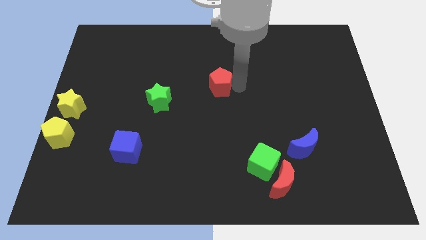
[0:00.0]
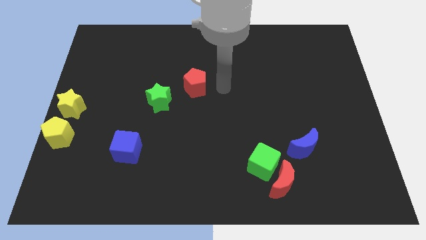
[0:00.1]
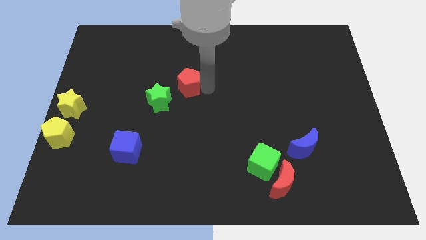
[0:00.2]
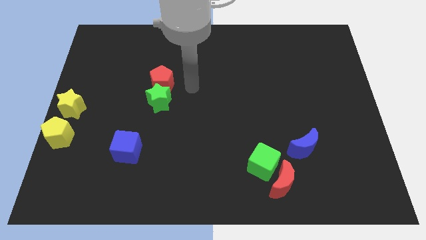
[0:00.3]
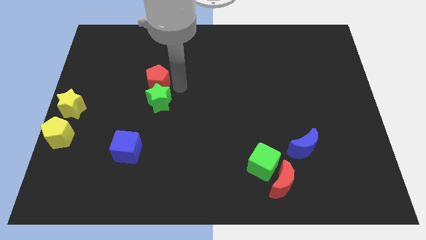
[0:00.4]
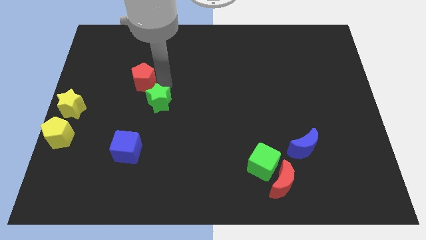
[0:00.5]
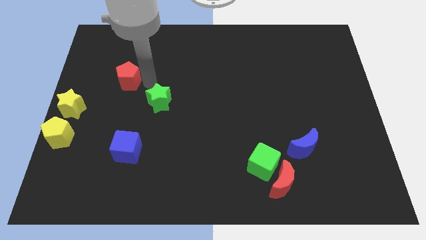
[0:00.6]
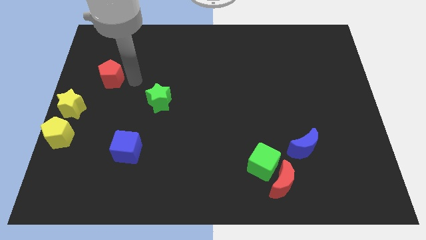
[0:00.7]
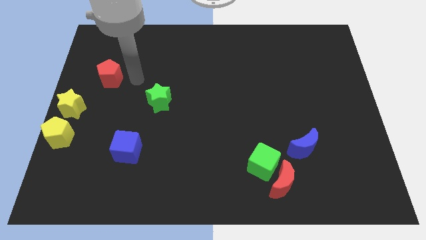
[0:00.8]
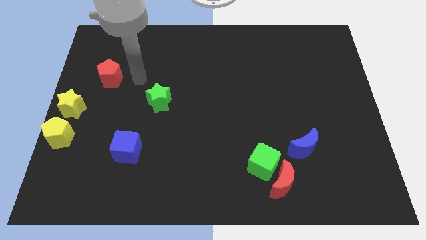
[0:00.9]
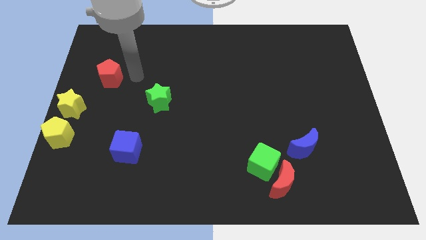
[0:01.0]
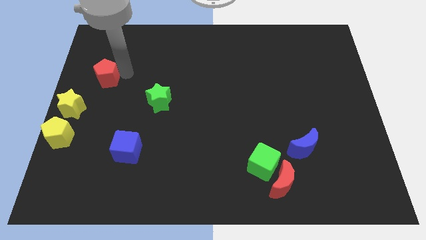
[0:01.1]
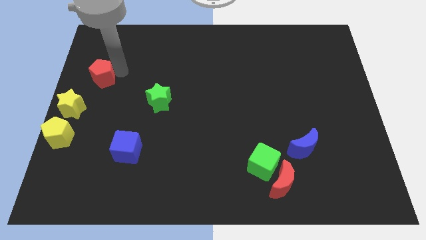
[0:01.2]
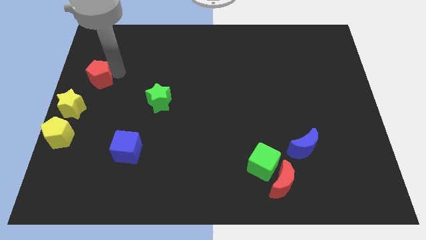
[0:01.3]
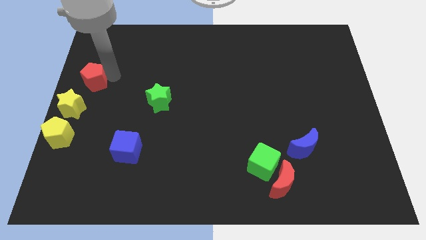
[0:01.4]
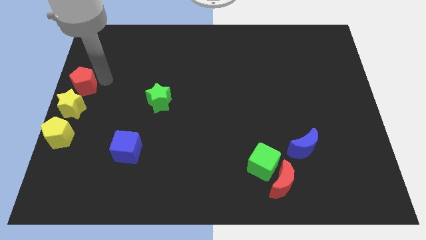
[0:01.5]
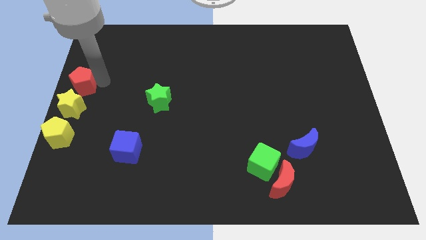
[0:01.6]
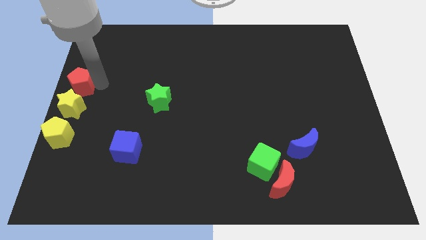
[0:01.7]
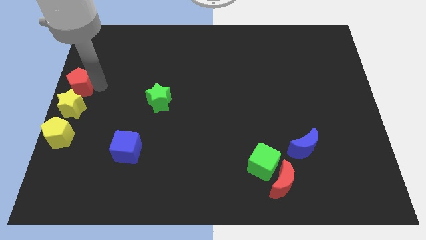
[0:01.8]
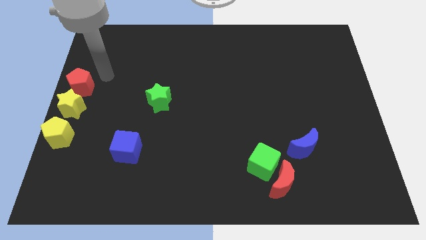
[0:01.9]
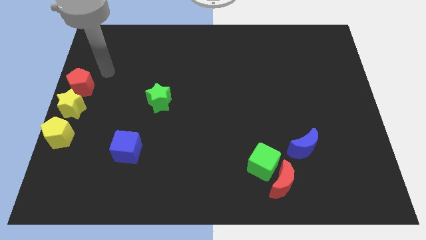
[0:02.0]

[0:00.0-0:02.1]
place red pentagon on top of yellow star

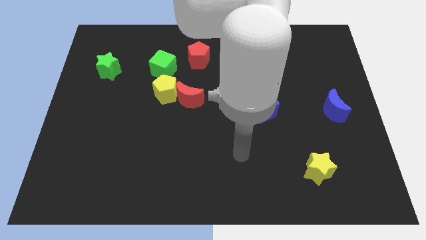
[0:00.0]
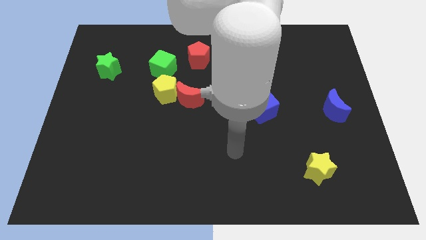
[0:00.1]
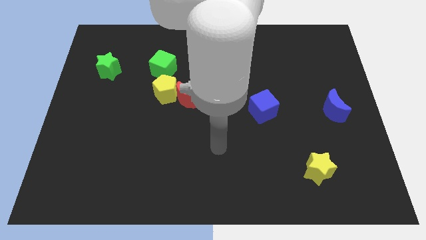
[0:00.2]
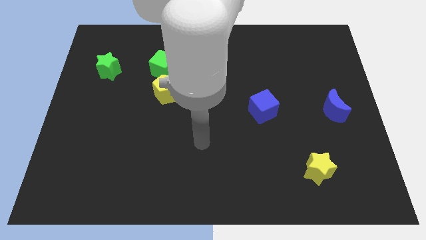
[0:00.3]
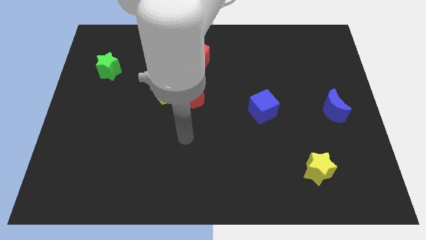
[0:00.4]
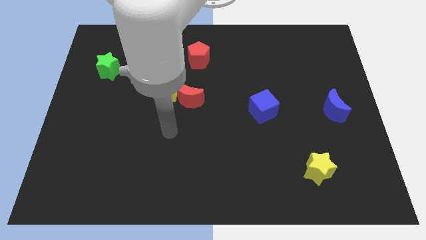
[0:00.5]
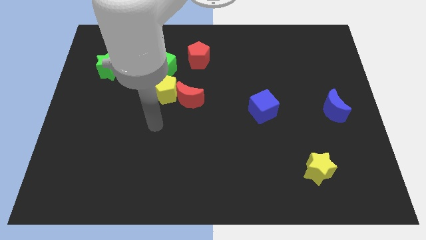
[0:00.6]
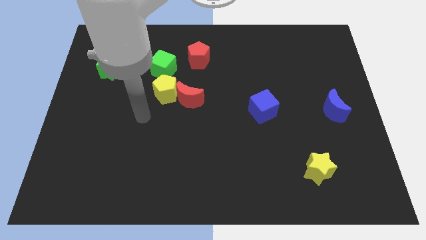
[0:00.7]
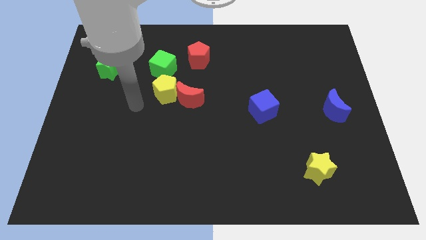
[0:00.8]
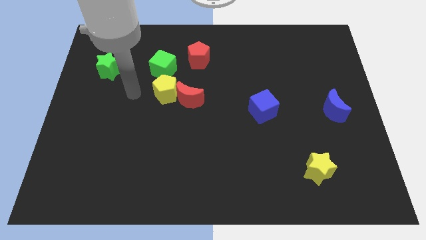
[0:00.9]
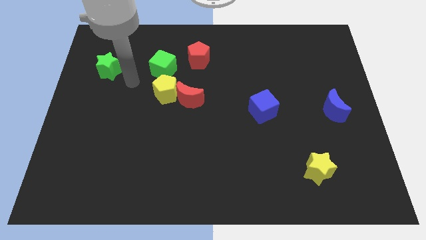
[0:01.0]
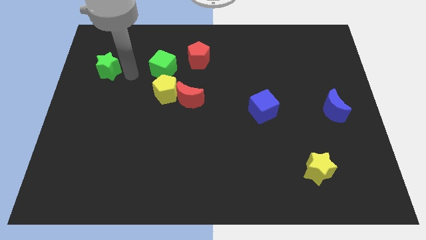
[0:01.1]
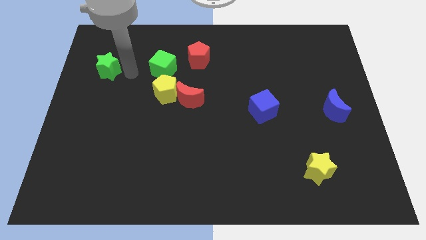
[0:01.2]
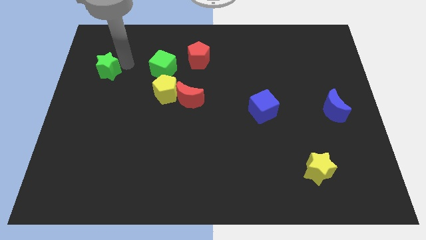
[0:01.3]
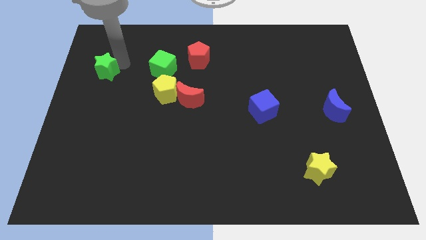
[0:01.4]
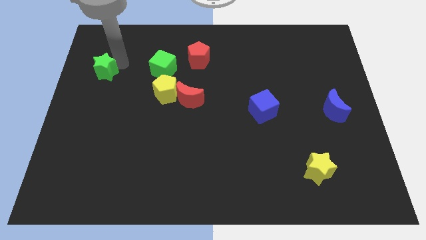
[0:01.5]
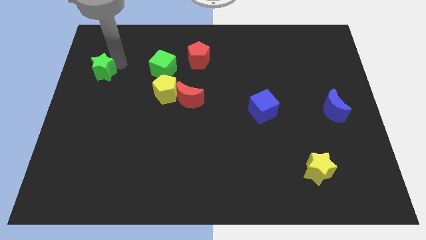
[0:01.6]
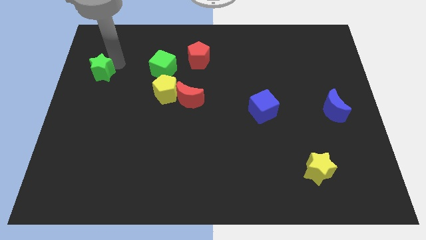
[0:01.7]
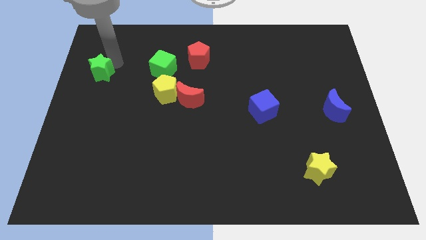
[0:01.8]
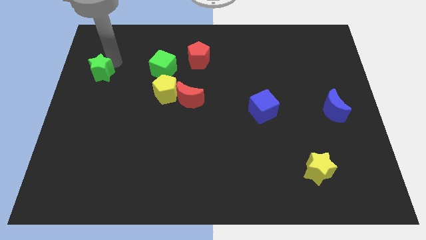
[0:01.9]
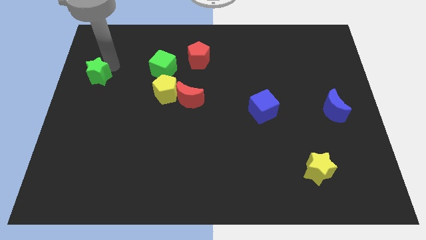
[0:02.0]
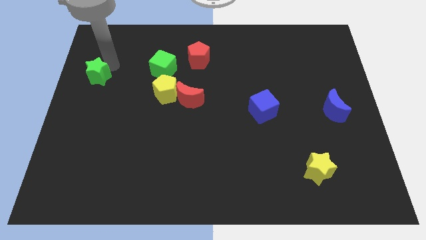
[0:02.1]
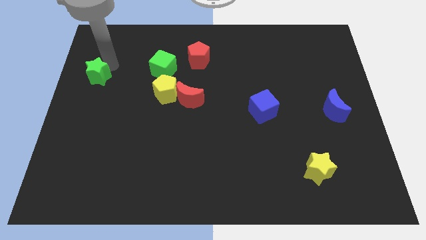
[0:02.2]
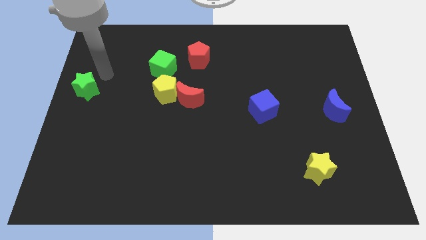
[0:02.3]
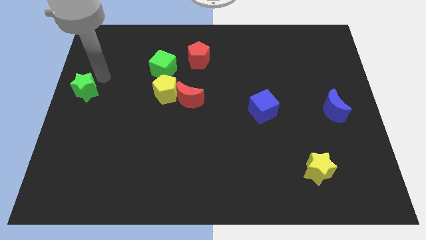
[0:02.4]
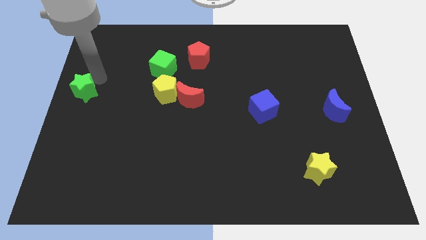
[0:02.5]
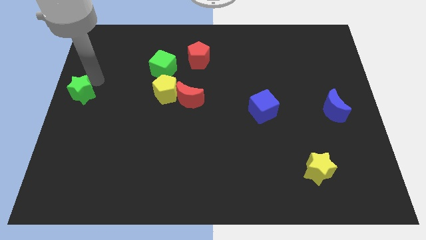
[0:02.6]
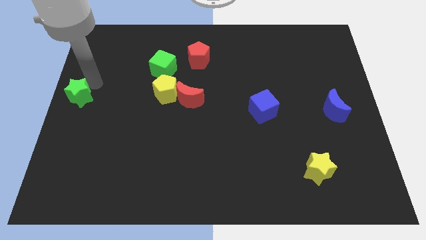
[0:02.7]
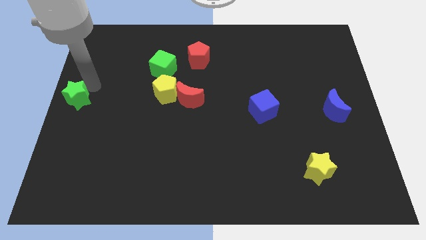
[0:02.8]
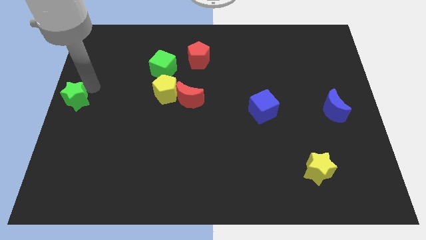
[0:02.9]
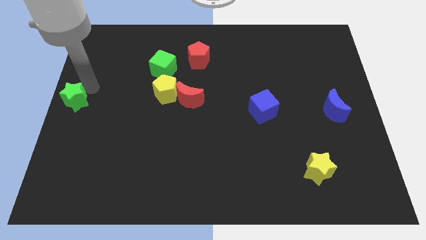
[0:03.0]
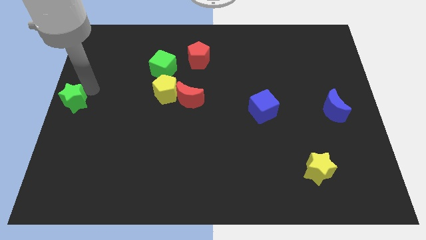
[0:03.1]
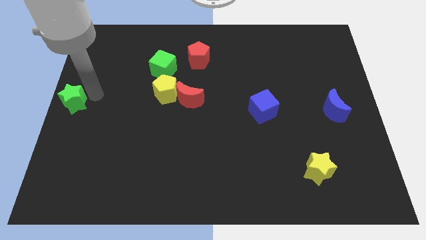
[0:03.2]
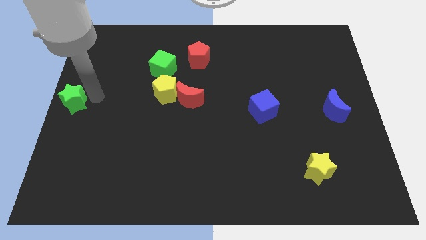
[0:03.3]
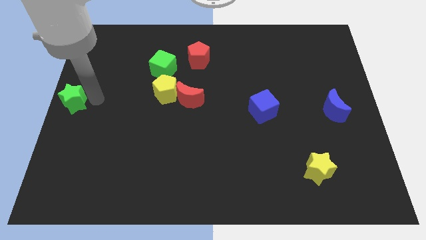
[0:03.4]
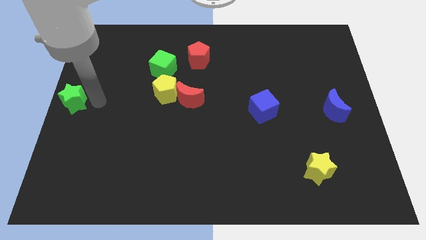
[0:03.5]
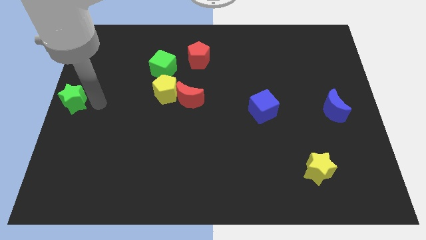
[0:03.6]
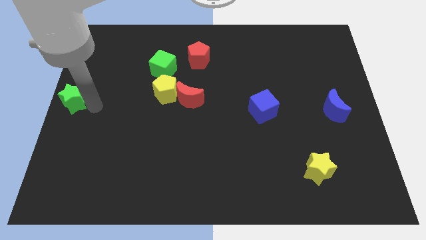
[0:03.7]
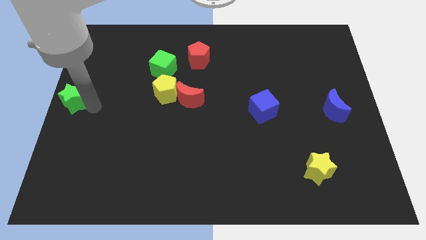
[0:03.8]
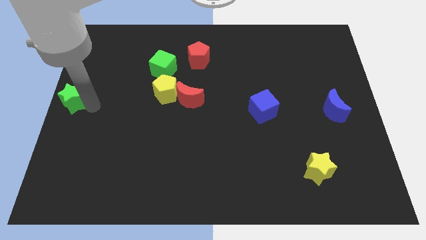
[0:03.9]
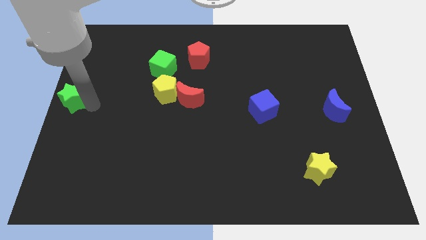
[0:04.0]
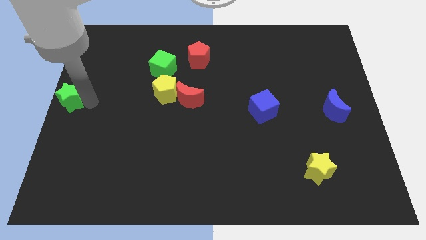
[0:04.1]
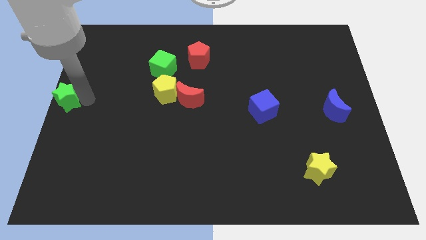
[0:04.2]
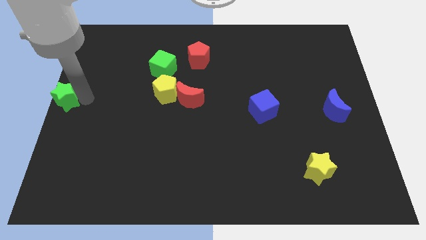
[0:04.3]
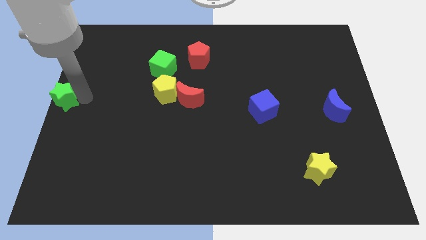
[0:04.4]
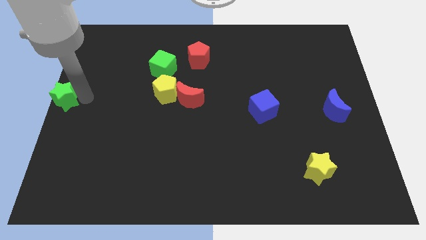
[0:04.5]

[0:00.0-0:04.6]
push the green star to the cneter left of the board

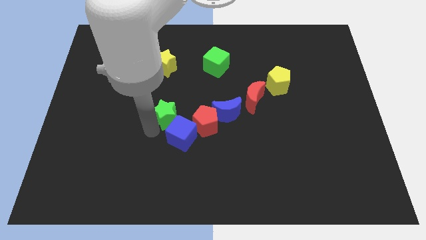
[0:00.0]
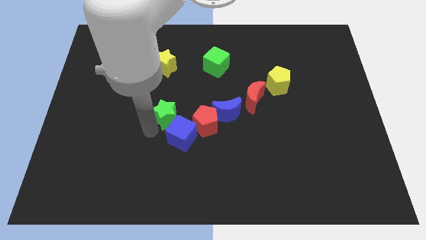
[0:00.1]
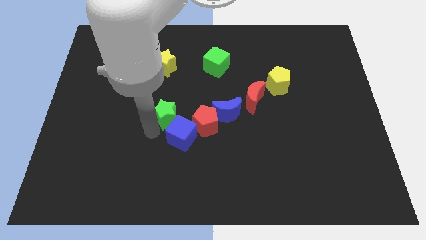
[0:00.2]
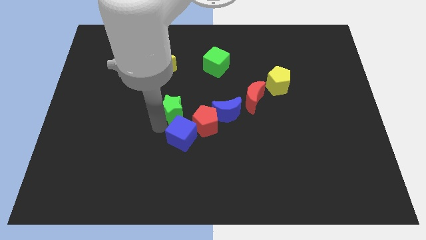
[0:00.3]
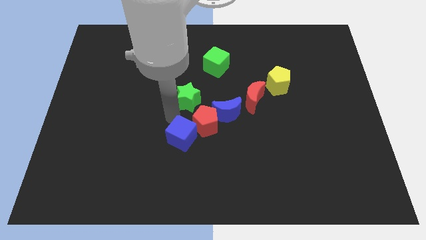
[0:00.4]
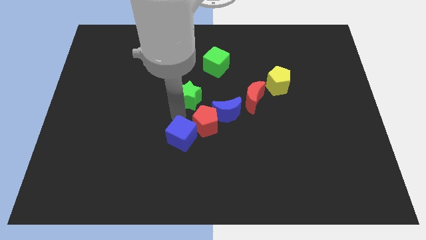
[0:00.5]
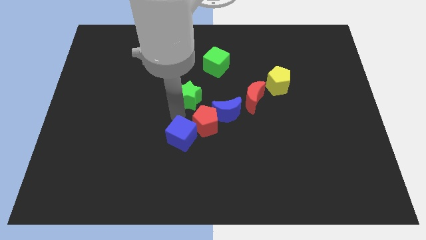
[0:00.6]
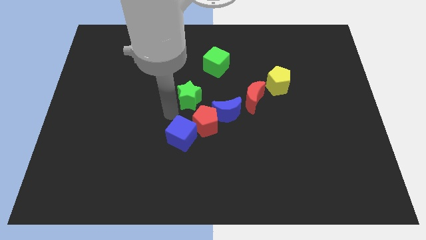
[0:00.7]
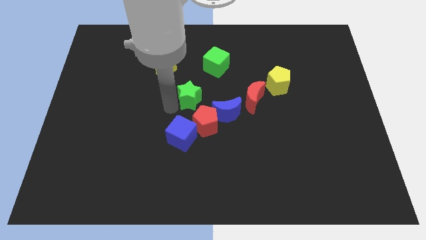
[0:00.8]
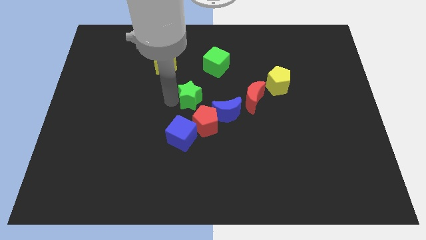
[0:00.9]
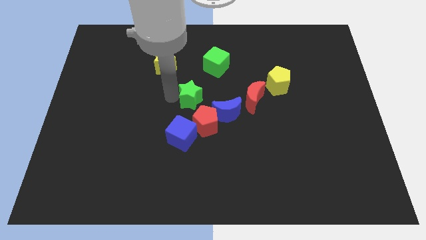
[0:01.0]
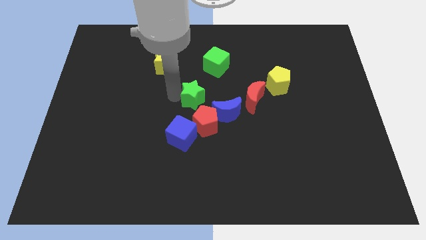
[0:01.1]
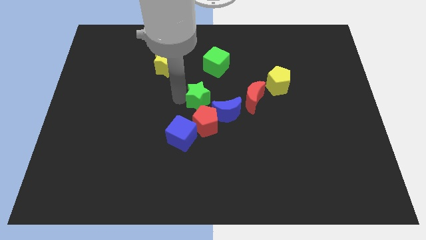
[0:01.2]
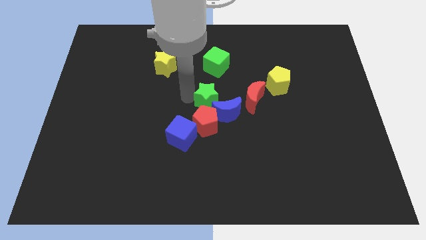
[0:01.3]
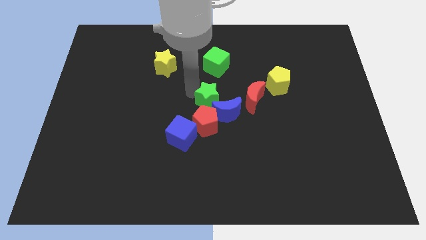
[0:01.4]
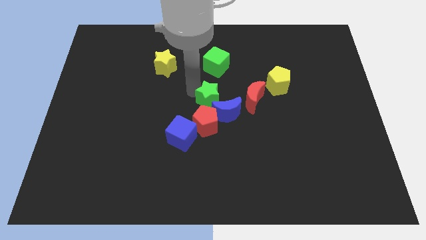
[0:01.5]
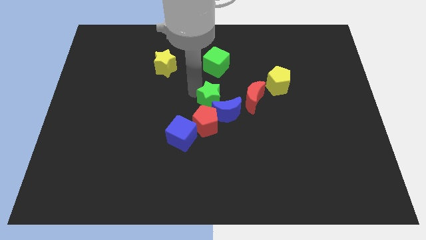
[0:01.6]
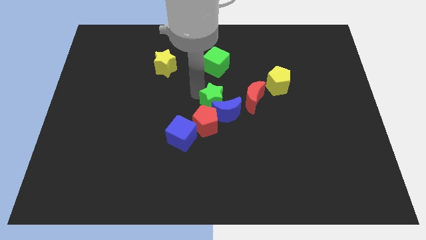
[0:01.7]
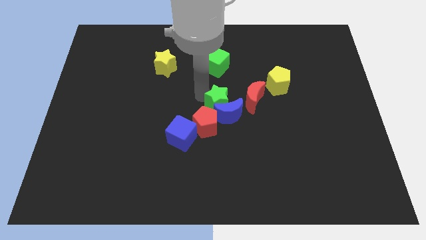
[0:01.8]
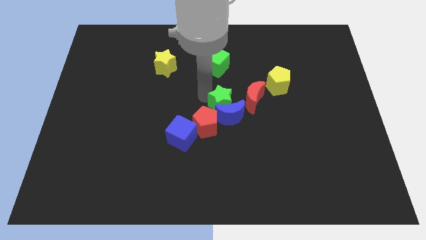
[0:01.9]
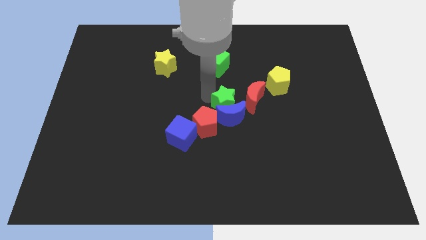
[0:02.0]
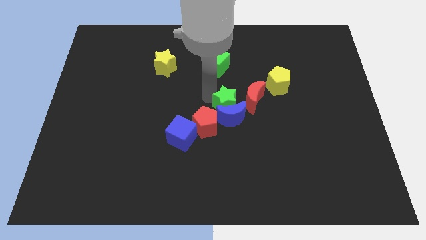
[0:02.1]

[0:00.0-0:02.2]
put the green star above the blue moon

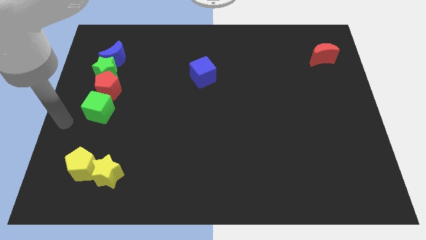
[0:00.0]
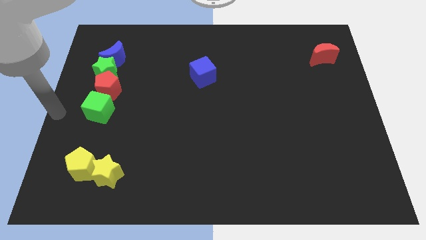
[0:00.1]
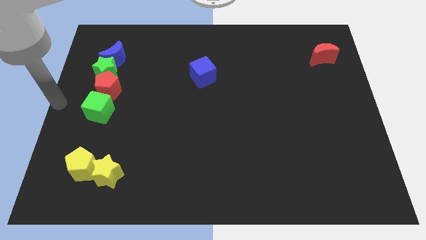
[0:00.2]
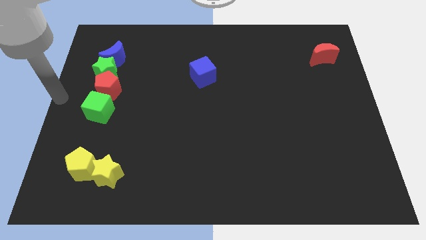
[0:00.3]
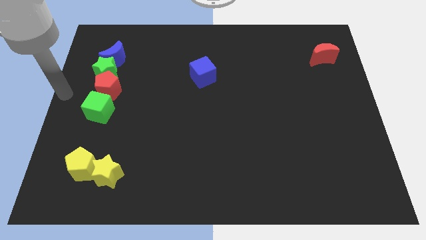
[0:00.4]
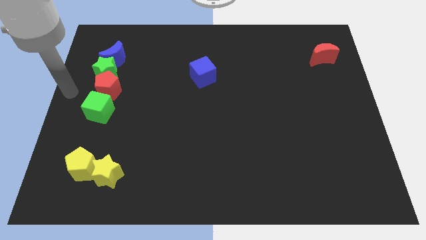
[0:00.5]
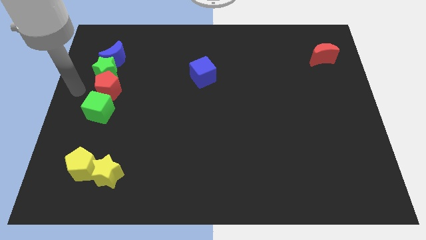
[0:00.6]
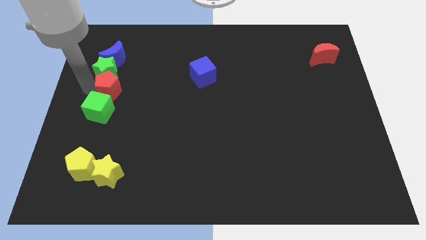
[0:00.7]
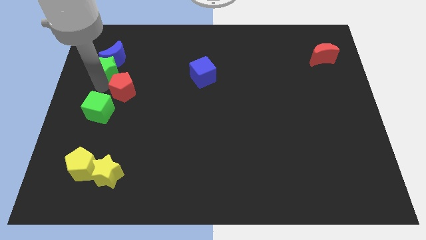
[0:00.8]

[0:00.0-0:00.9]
move arm close to red pentagon
